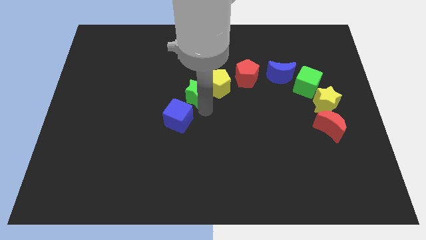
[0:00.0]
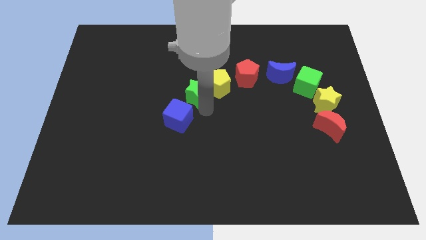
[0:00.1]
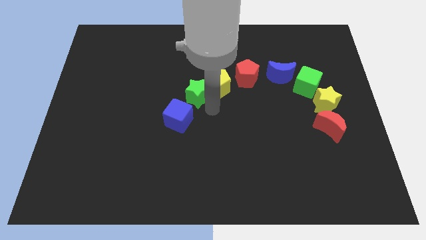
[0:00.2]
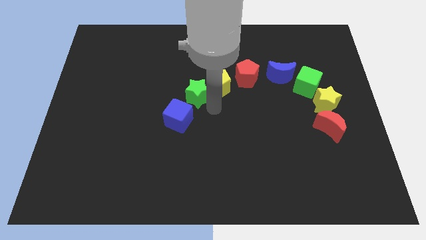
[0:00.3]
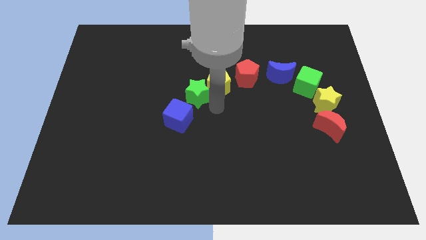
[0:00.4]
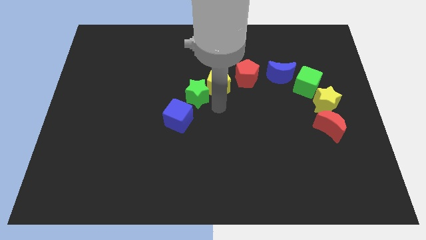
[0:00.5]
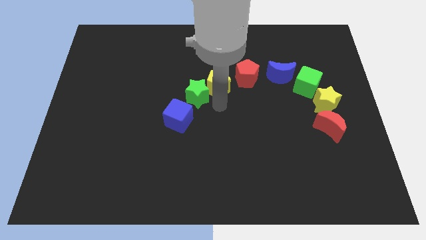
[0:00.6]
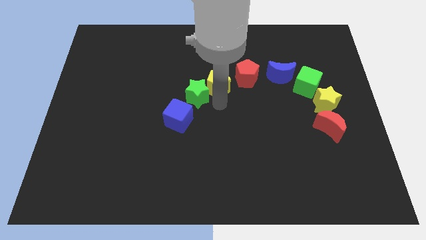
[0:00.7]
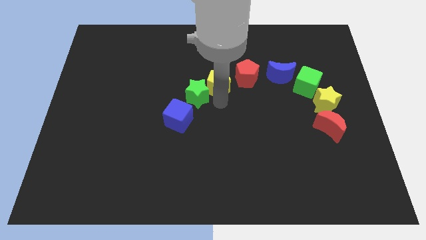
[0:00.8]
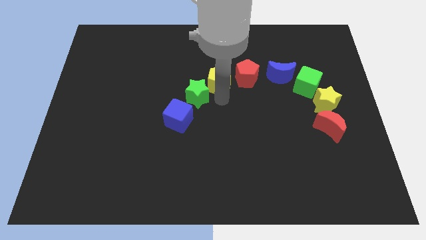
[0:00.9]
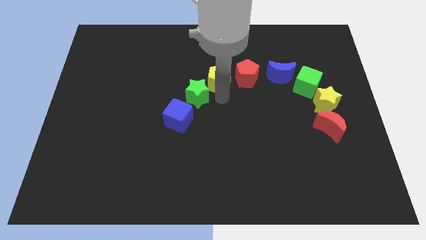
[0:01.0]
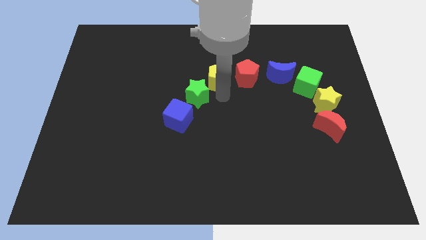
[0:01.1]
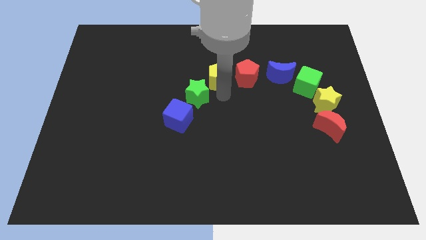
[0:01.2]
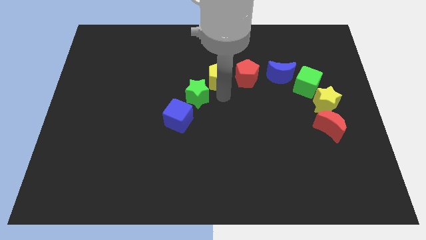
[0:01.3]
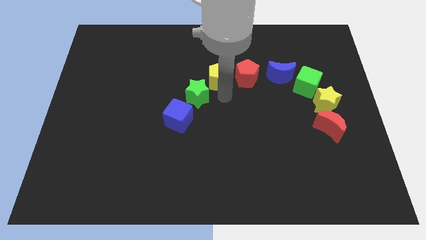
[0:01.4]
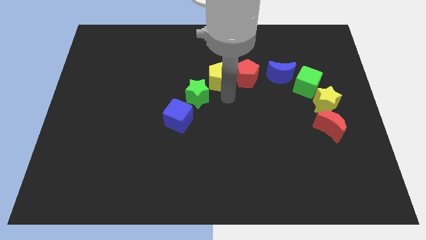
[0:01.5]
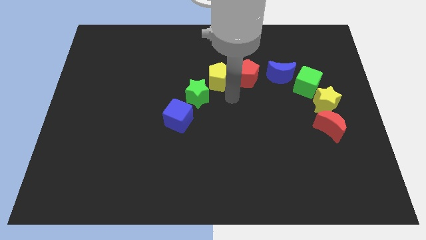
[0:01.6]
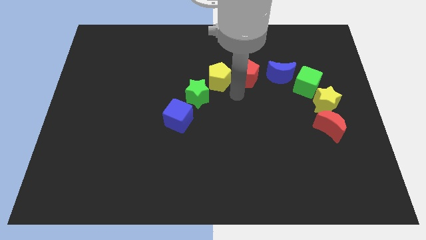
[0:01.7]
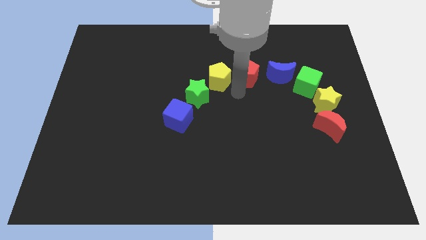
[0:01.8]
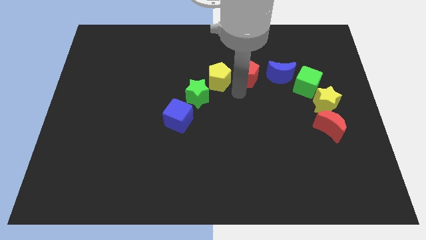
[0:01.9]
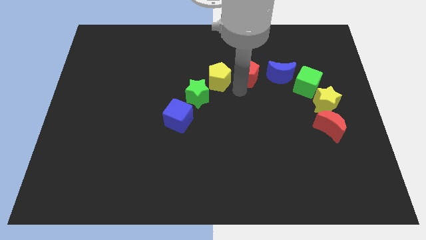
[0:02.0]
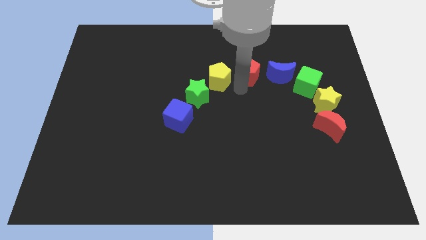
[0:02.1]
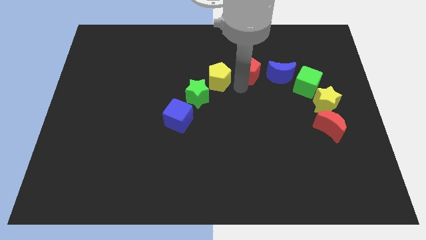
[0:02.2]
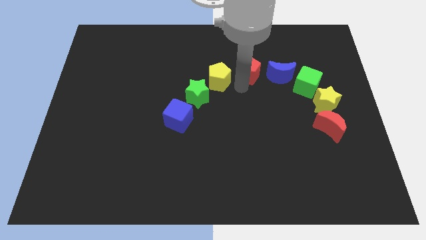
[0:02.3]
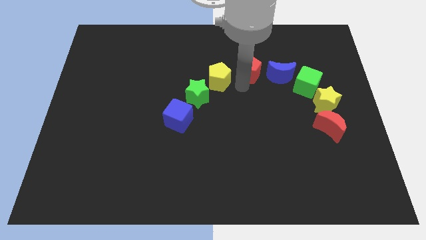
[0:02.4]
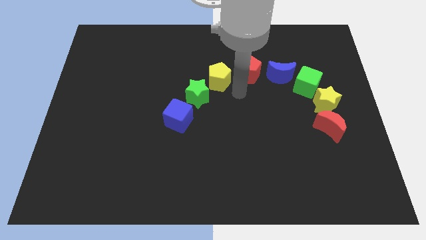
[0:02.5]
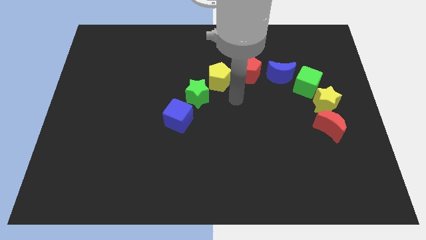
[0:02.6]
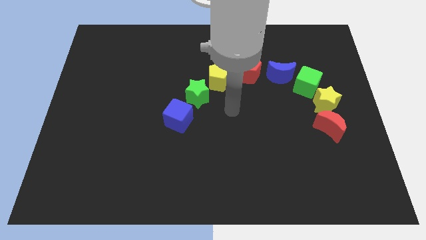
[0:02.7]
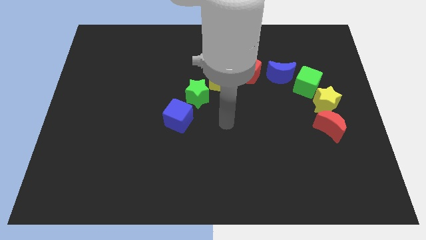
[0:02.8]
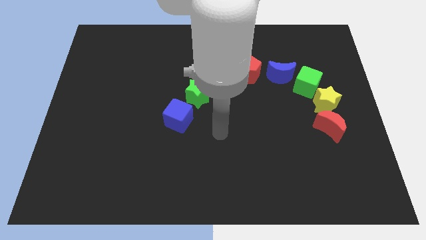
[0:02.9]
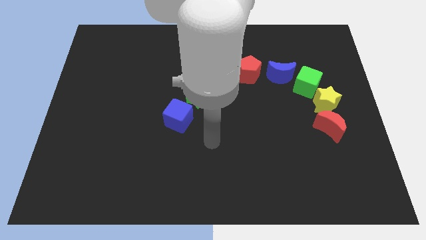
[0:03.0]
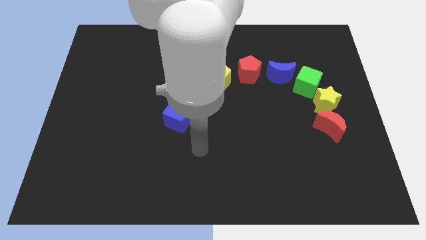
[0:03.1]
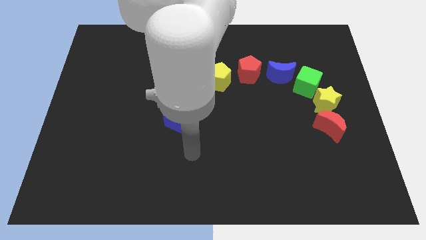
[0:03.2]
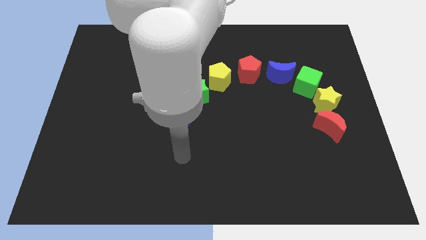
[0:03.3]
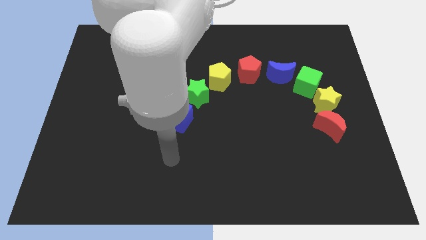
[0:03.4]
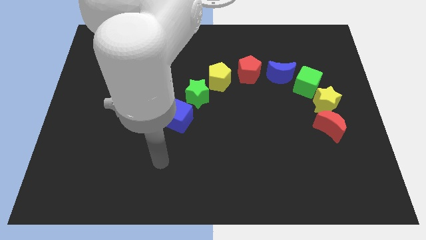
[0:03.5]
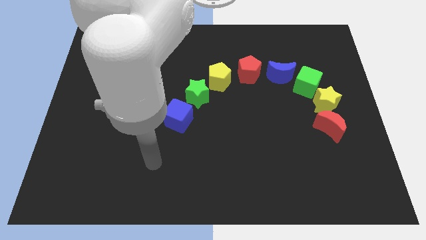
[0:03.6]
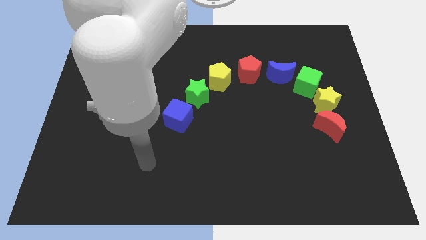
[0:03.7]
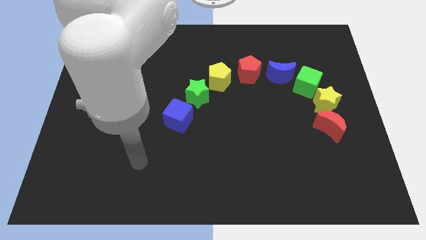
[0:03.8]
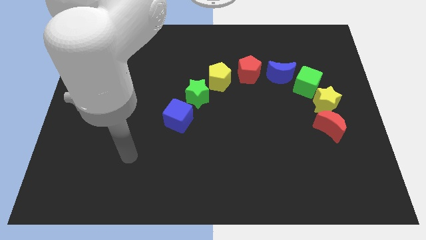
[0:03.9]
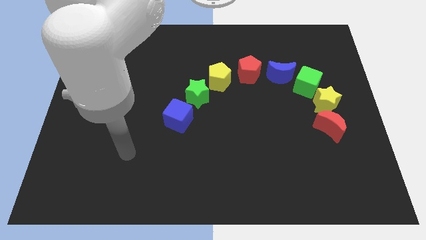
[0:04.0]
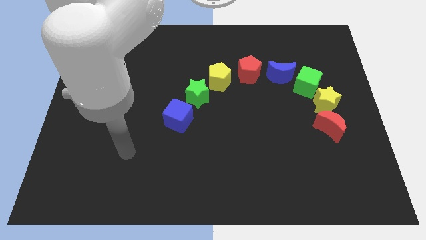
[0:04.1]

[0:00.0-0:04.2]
move your arm away from the yellow pentagon

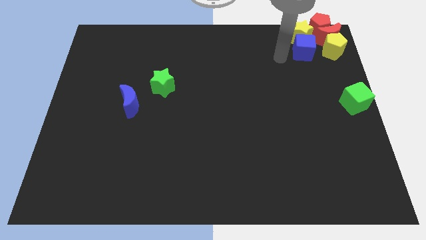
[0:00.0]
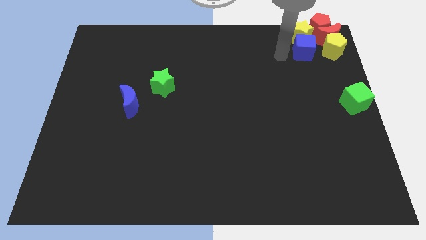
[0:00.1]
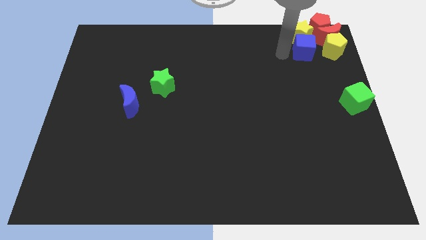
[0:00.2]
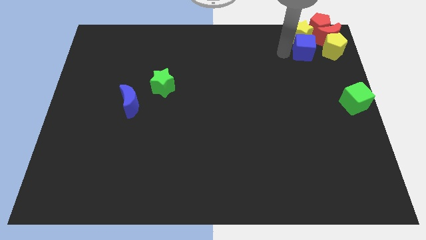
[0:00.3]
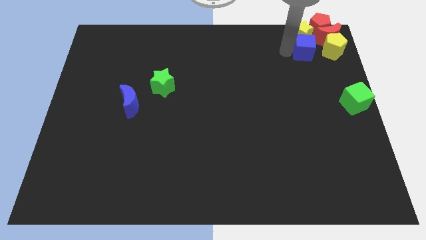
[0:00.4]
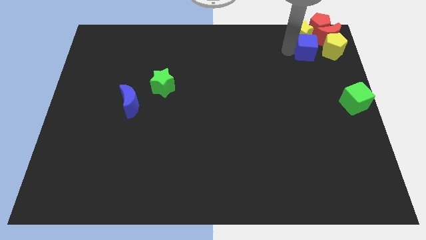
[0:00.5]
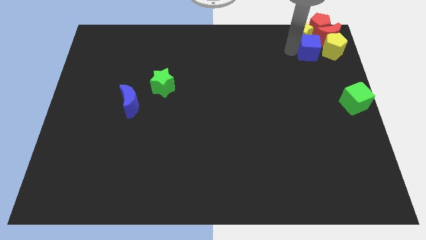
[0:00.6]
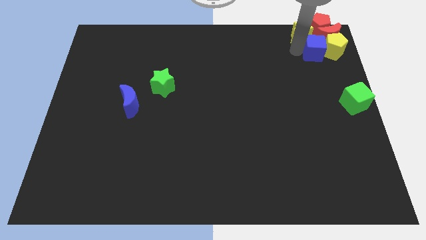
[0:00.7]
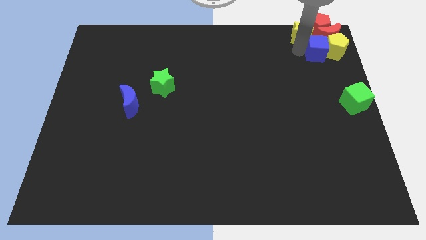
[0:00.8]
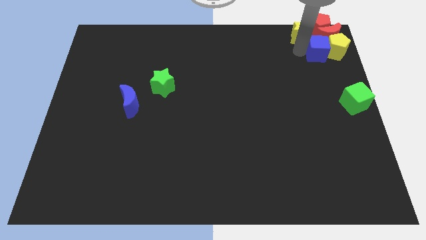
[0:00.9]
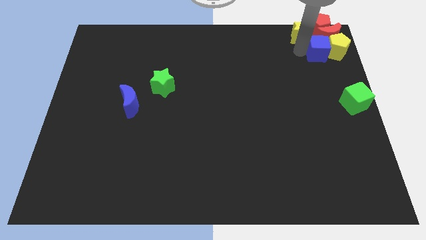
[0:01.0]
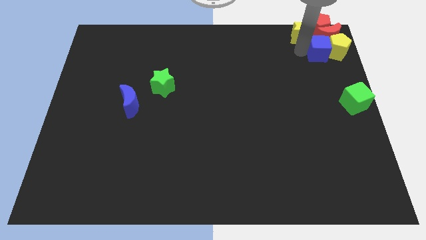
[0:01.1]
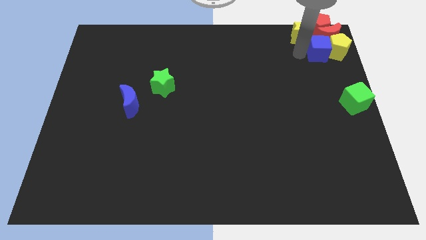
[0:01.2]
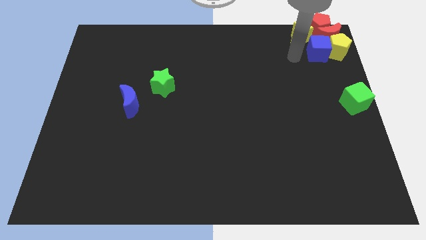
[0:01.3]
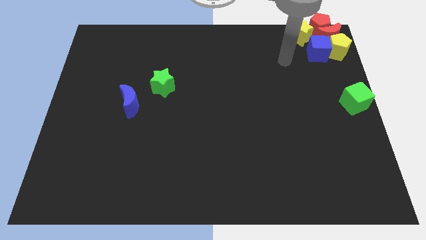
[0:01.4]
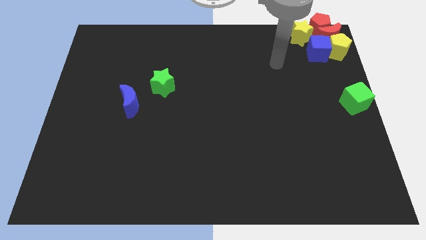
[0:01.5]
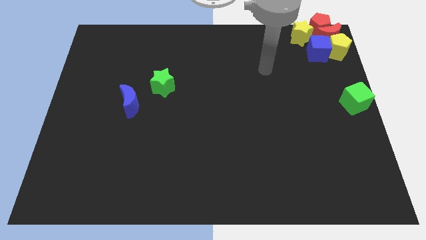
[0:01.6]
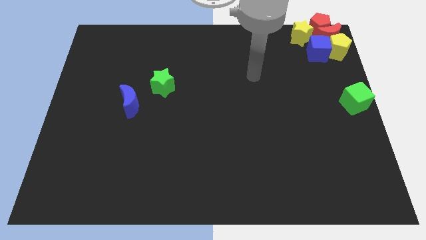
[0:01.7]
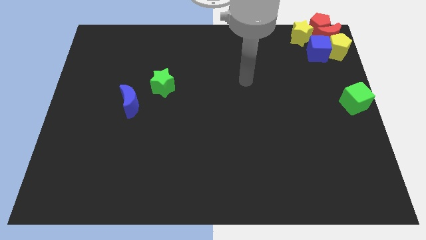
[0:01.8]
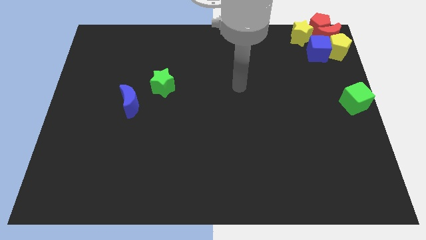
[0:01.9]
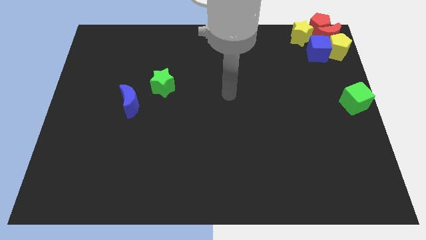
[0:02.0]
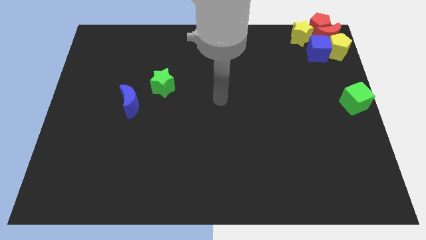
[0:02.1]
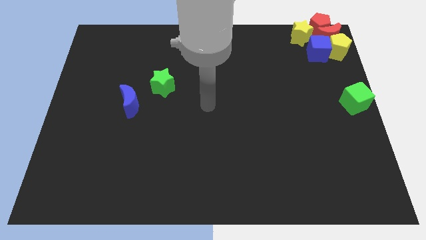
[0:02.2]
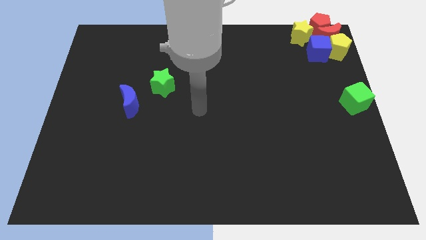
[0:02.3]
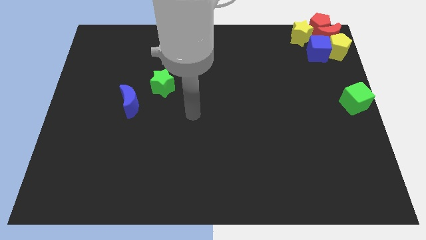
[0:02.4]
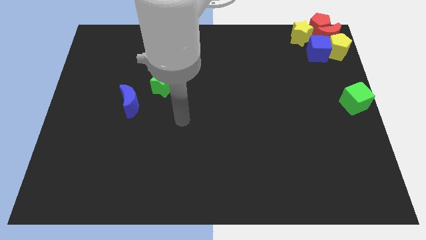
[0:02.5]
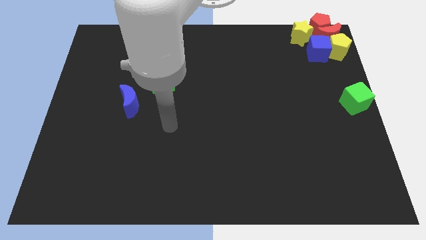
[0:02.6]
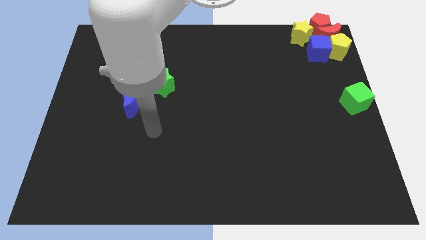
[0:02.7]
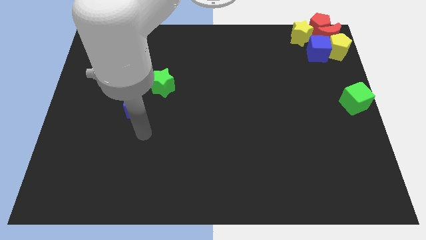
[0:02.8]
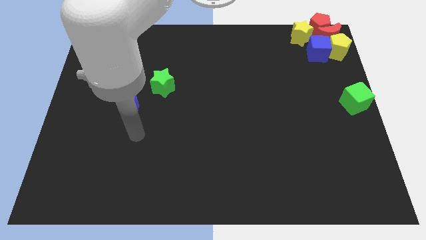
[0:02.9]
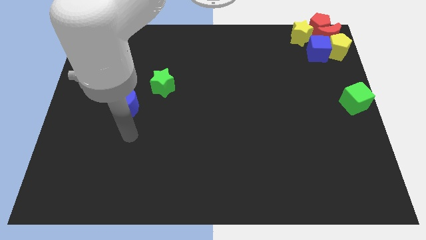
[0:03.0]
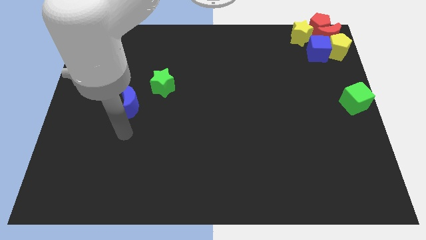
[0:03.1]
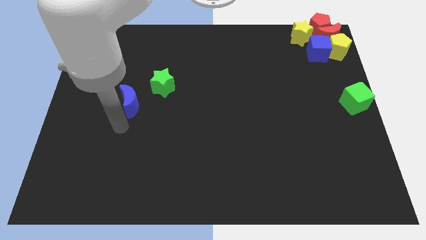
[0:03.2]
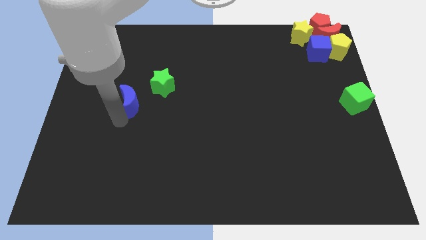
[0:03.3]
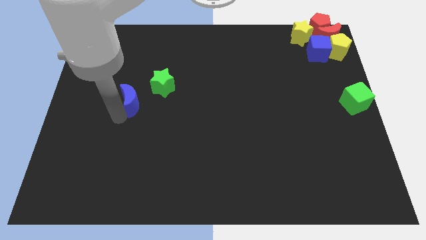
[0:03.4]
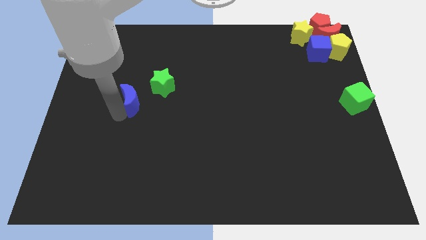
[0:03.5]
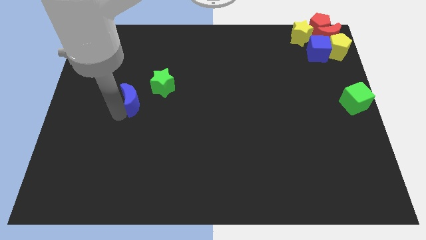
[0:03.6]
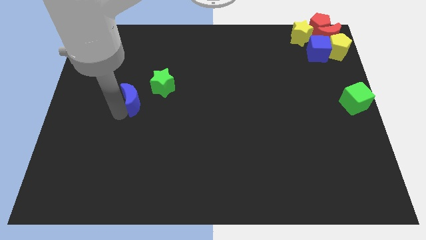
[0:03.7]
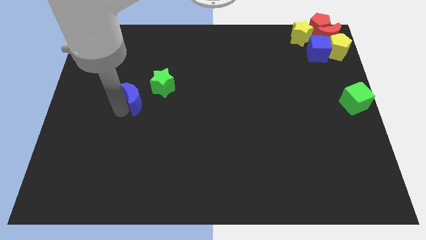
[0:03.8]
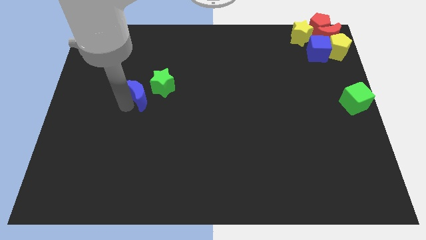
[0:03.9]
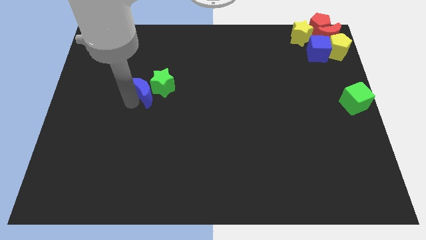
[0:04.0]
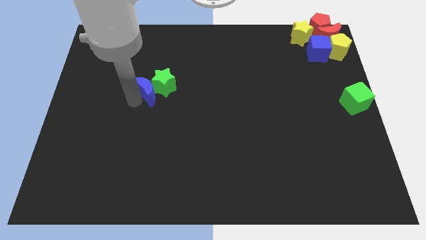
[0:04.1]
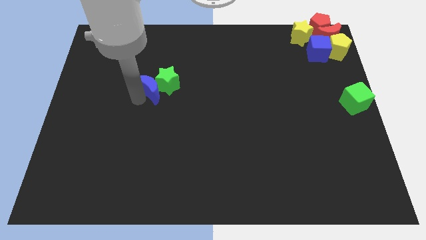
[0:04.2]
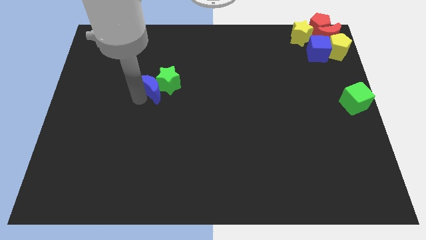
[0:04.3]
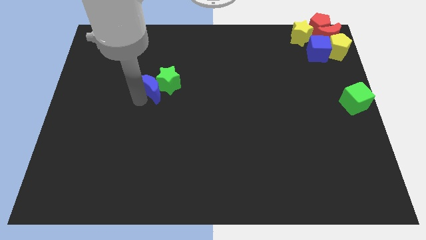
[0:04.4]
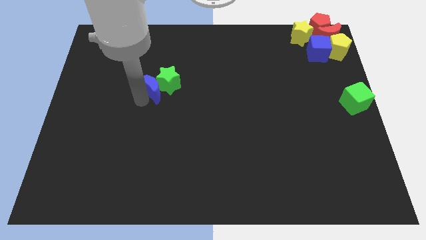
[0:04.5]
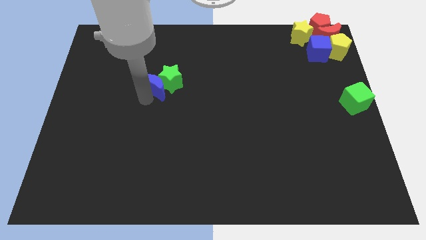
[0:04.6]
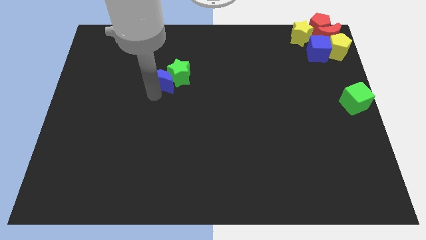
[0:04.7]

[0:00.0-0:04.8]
push the blue moon into the green star

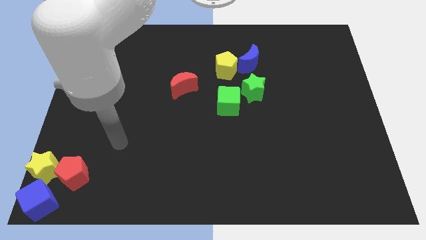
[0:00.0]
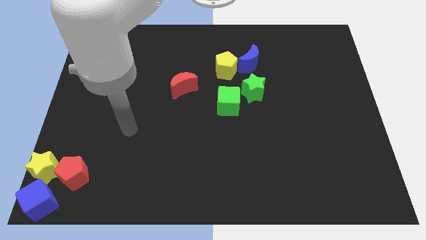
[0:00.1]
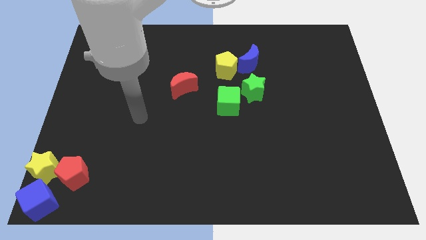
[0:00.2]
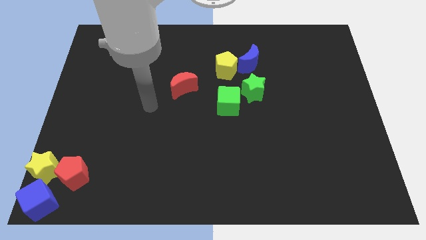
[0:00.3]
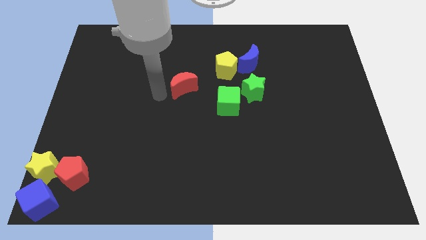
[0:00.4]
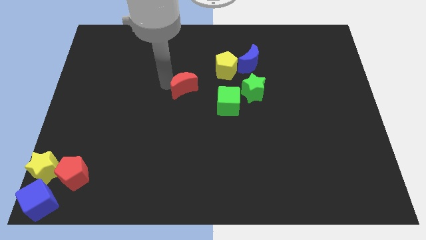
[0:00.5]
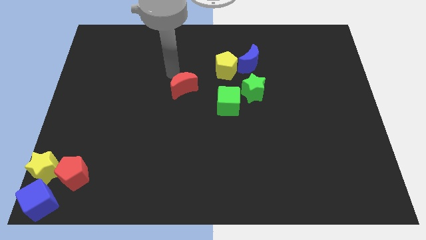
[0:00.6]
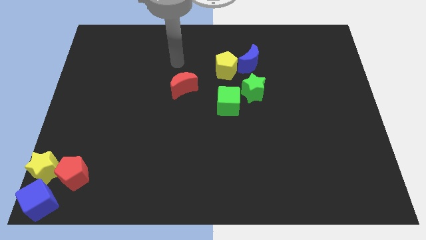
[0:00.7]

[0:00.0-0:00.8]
move arm towards red crescent
